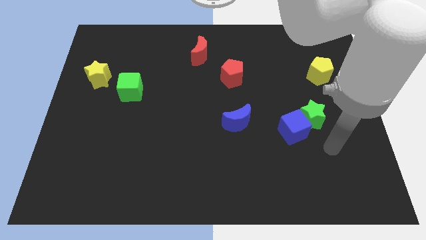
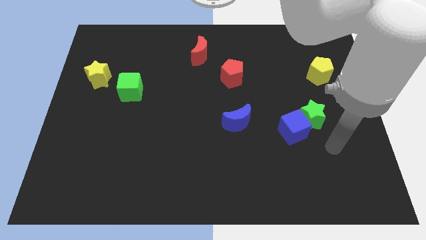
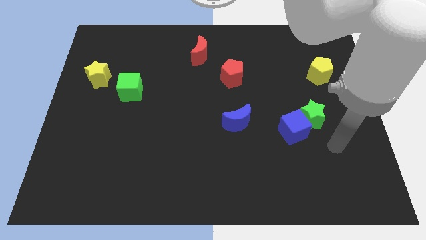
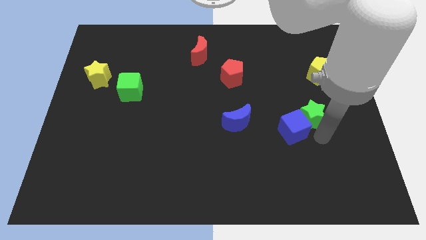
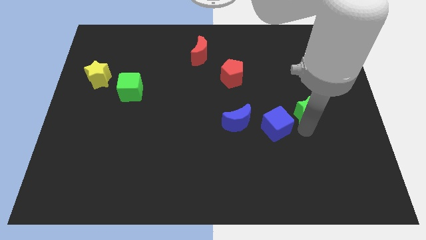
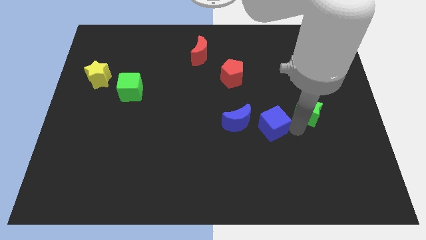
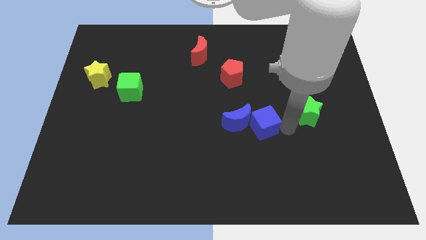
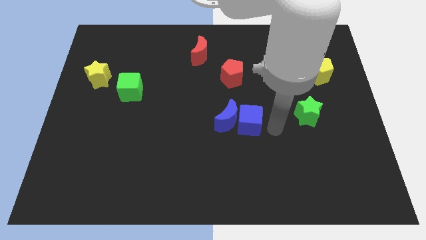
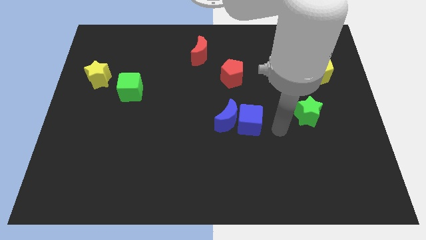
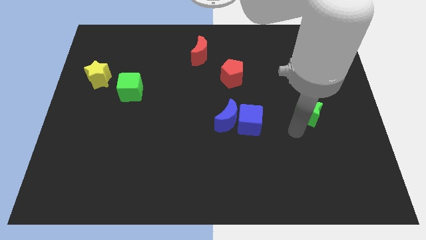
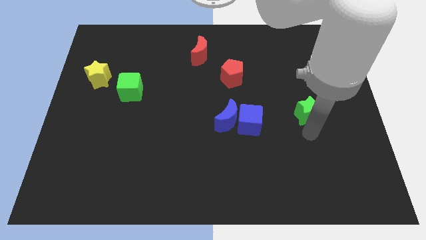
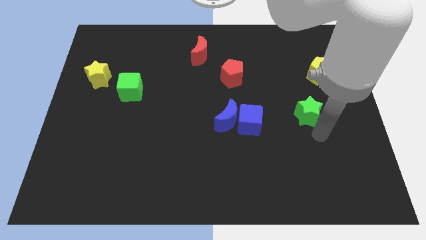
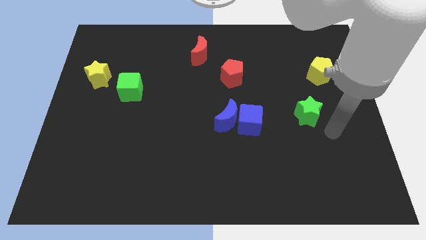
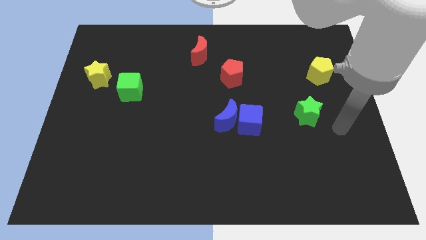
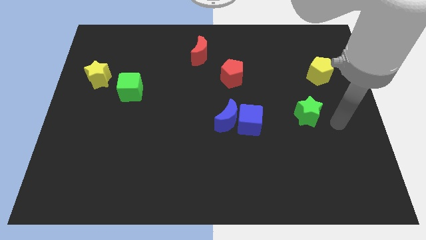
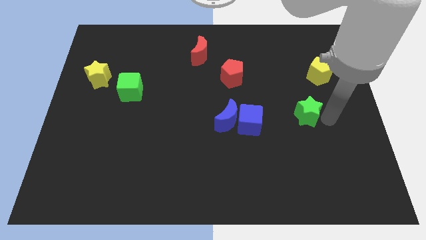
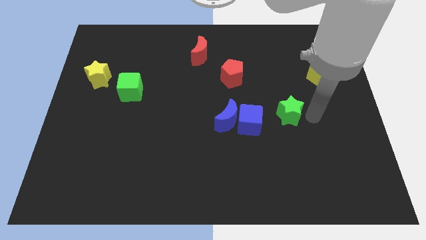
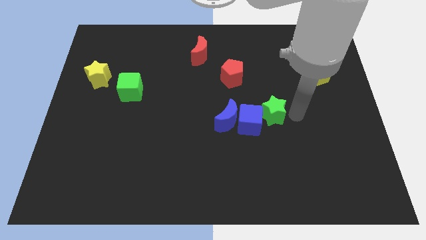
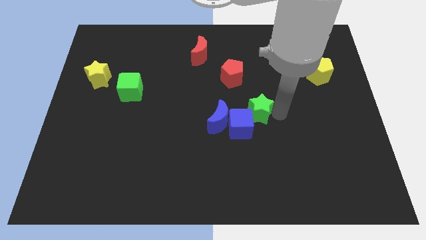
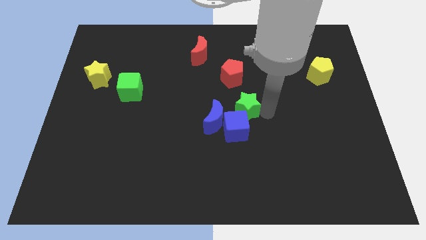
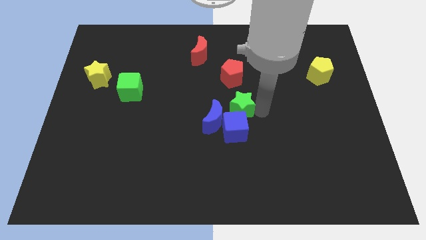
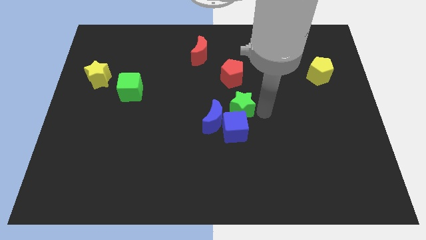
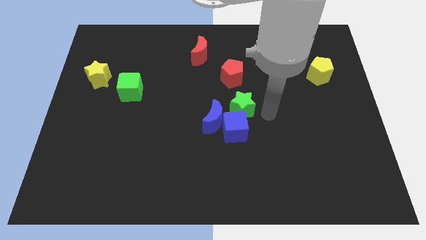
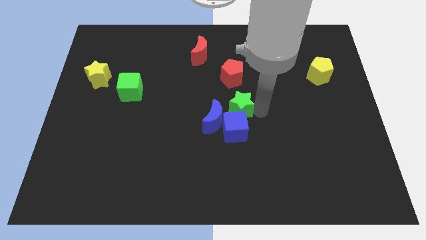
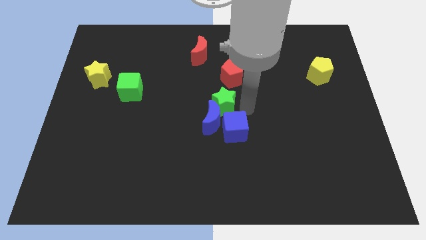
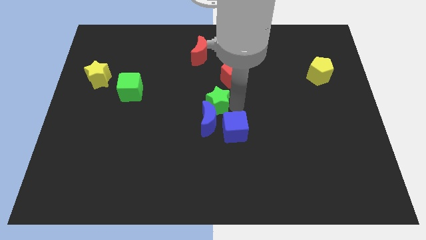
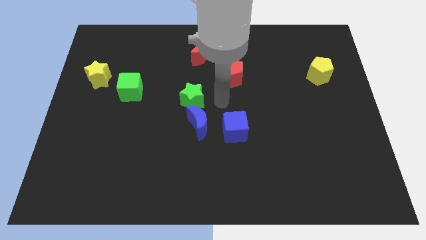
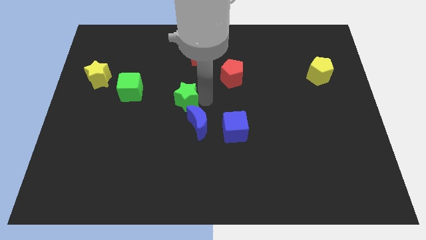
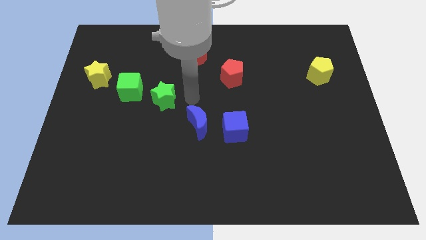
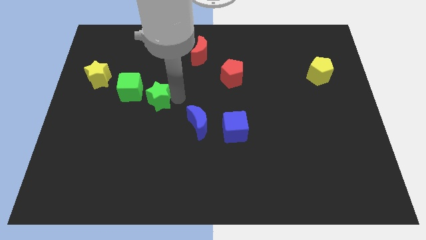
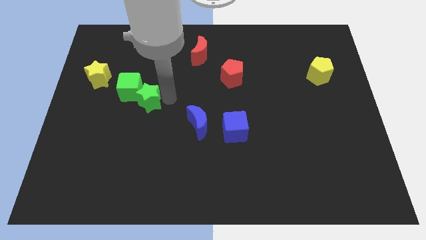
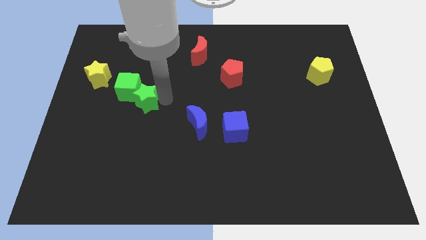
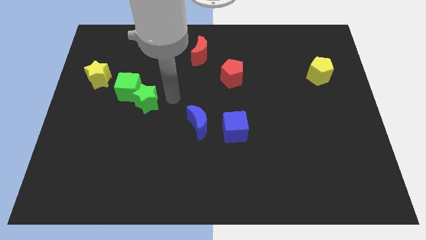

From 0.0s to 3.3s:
move the green star towards the green cube

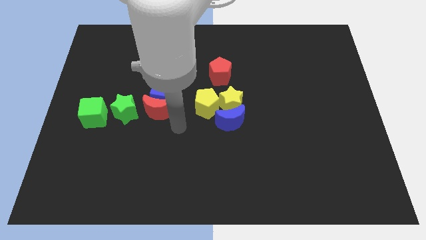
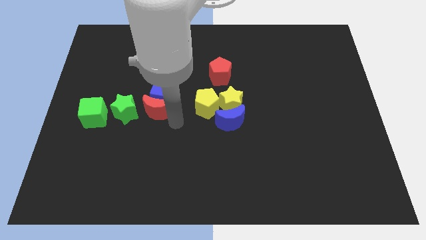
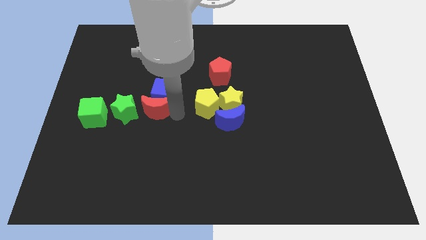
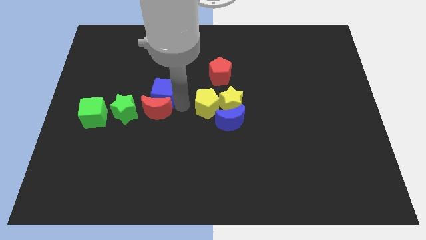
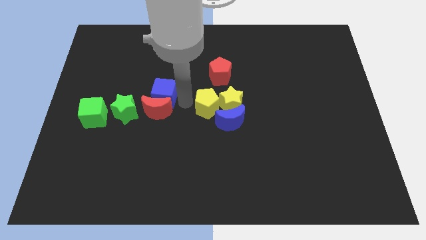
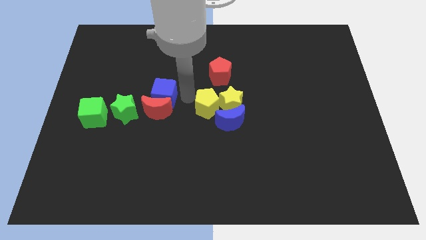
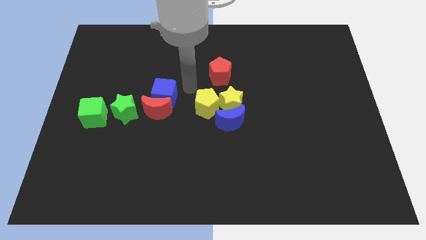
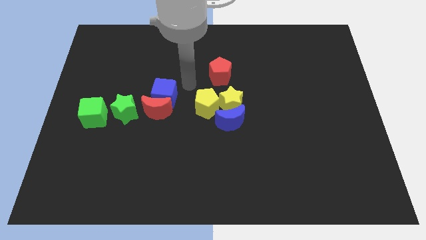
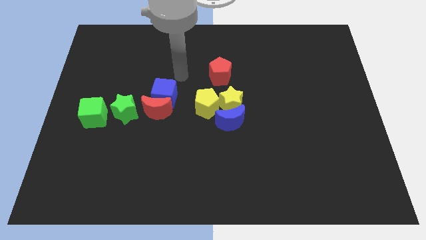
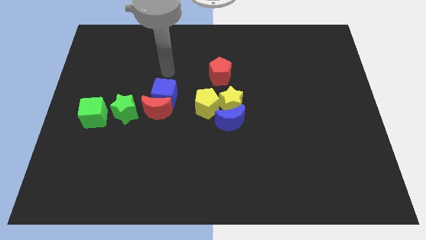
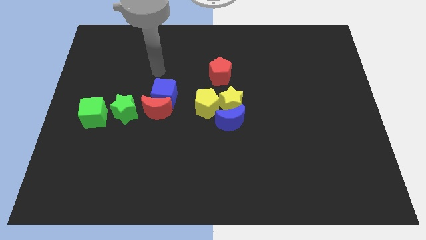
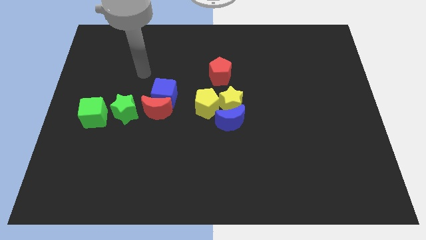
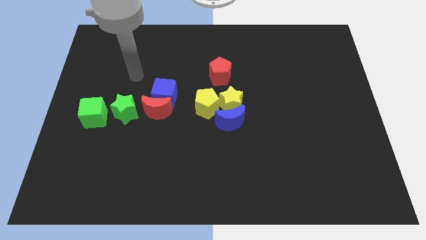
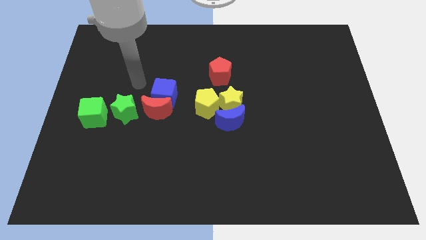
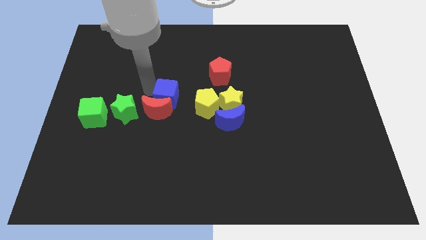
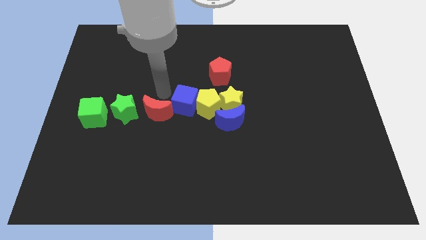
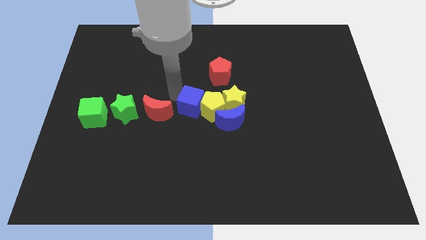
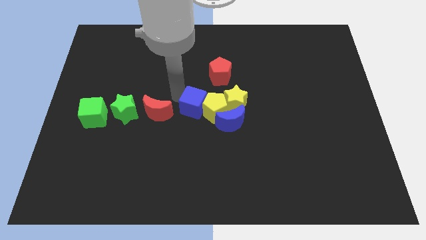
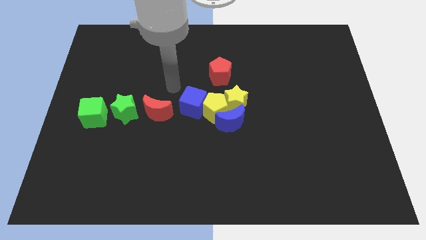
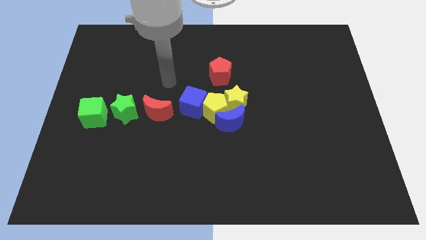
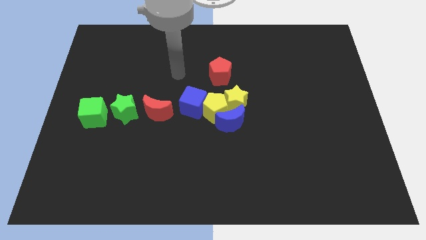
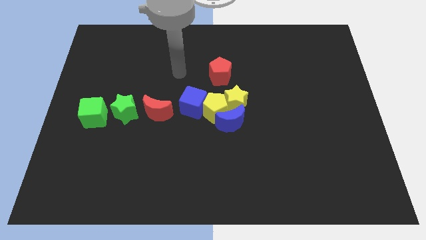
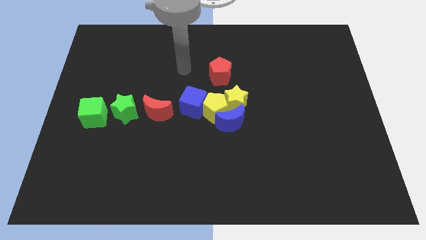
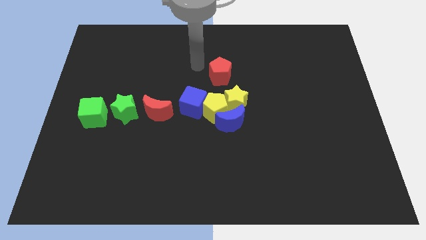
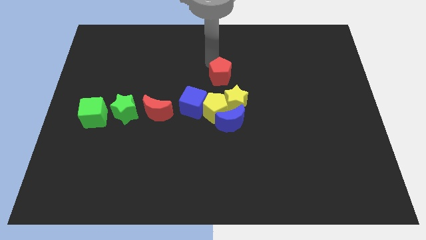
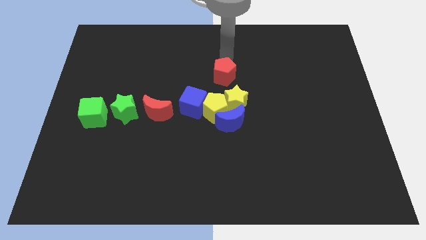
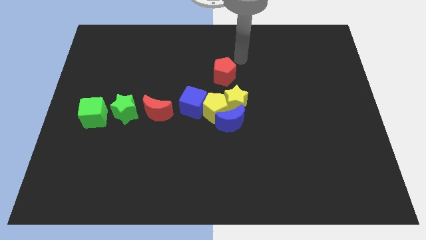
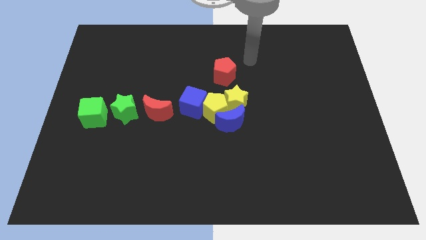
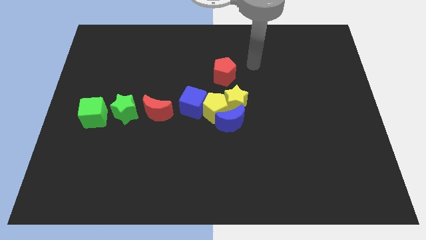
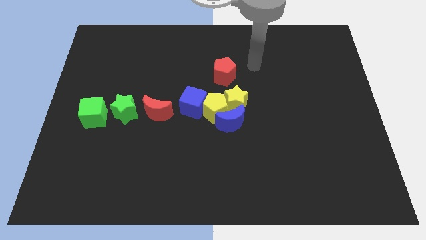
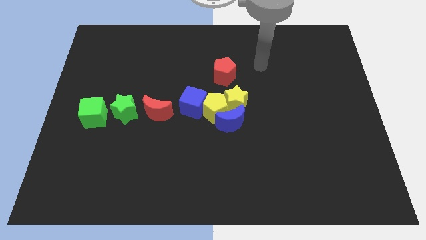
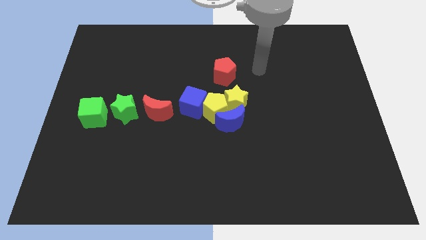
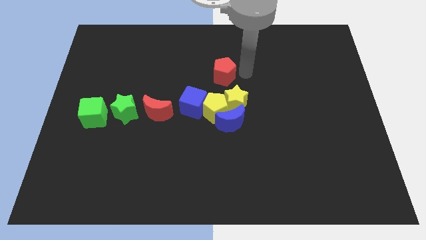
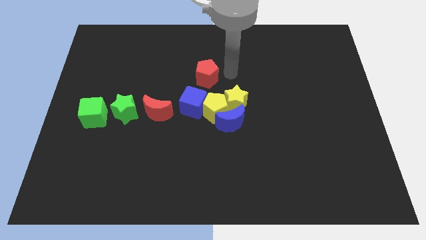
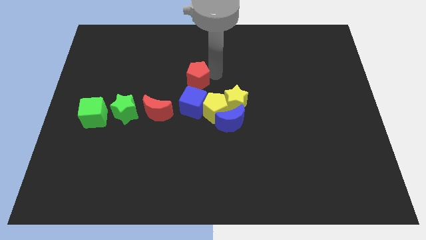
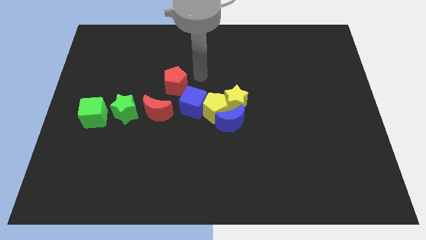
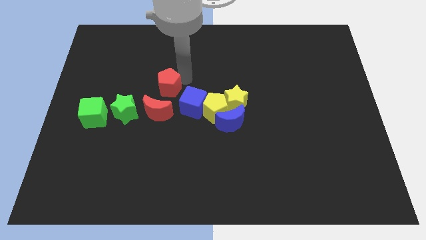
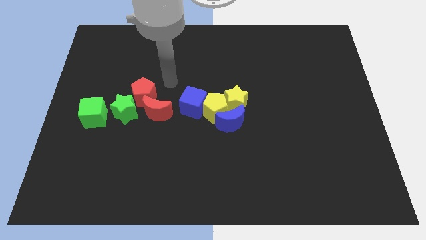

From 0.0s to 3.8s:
place the blue cube in between the red moon and yellow pentagon

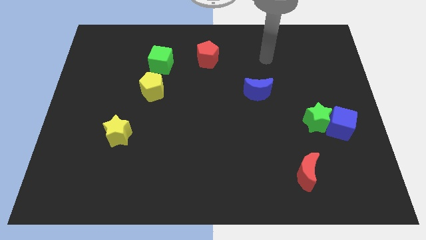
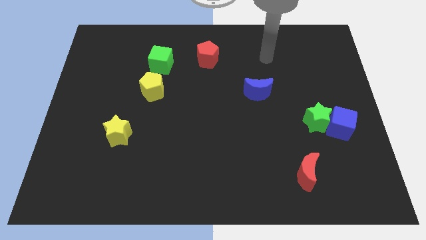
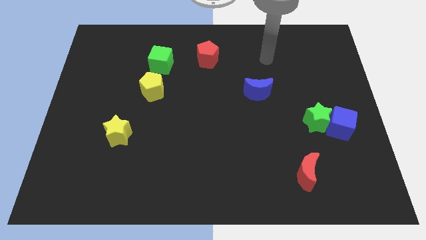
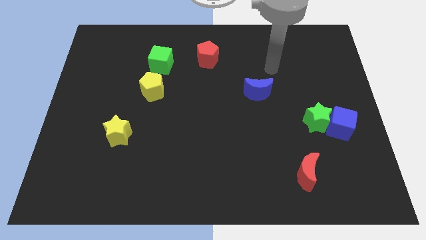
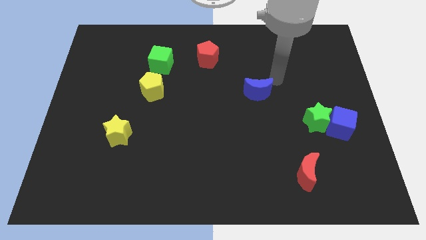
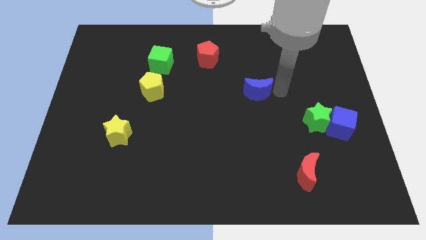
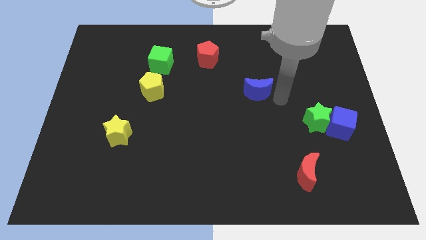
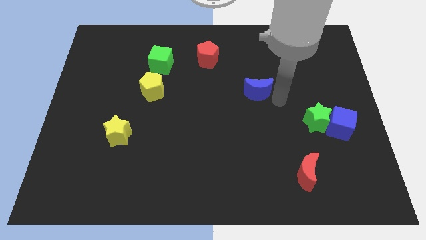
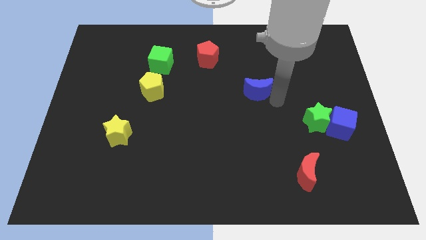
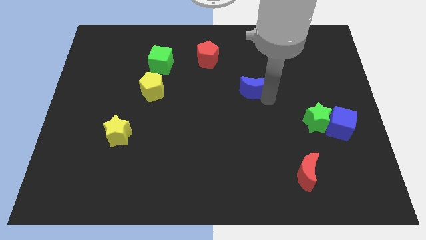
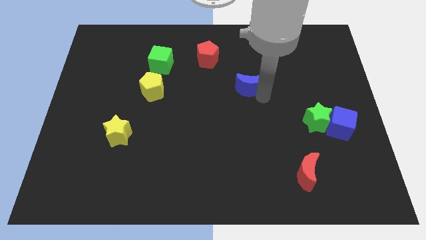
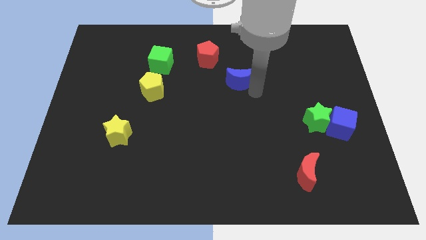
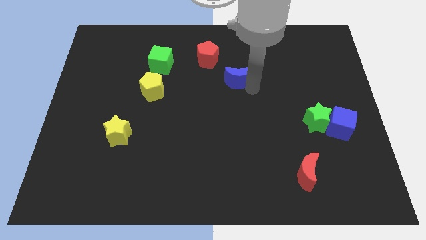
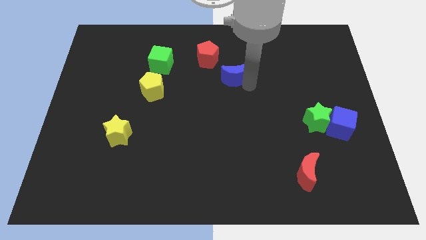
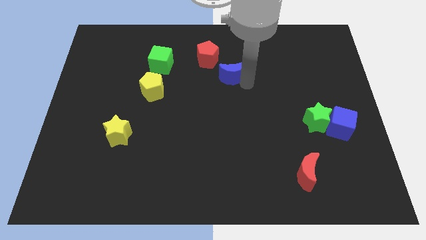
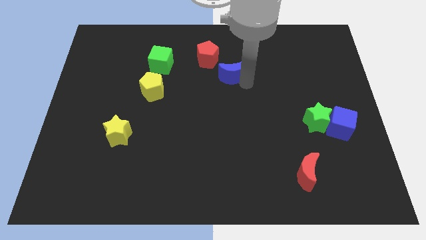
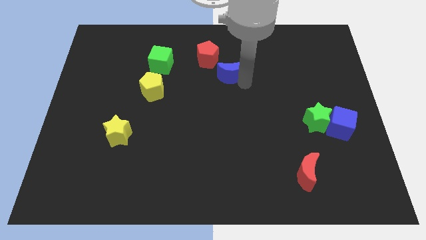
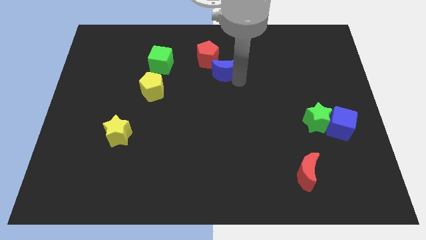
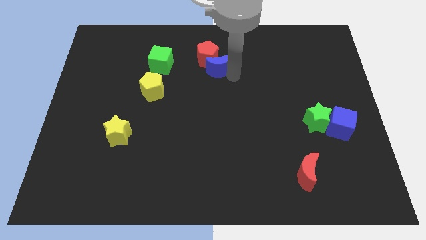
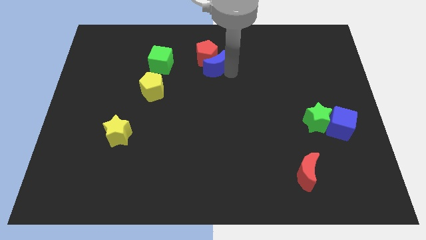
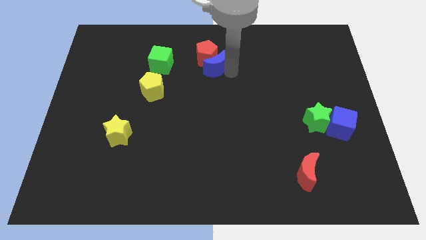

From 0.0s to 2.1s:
move the blue crescent towards the red pentagon
